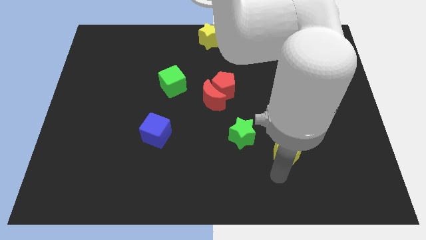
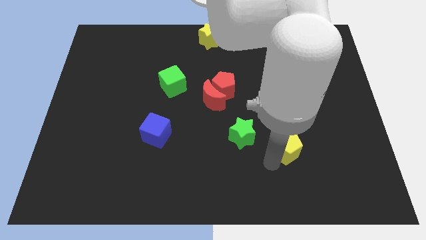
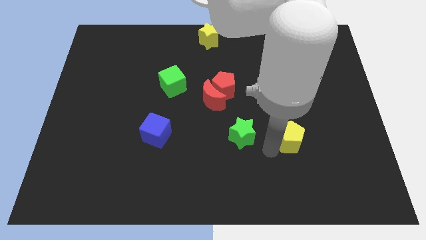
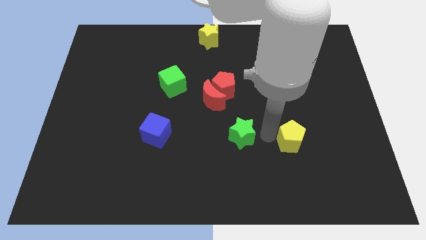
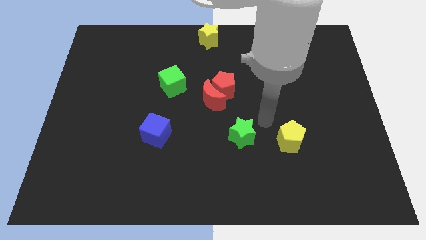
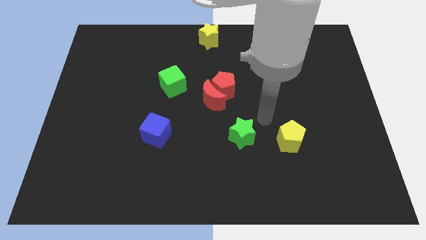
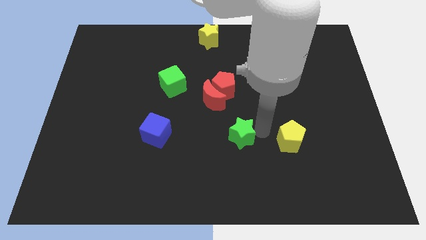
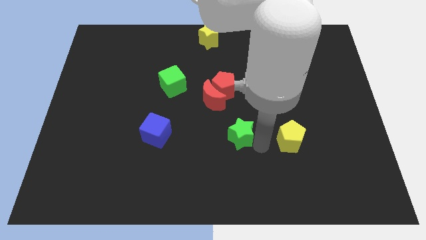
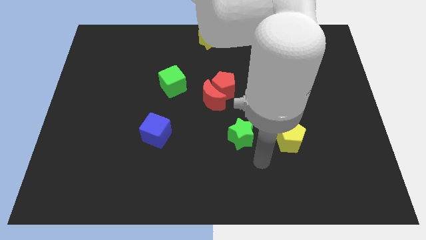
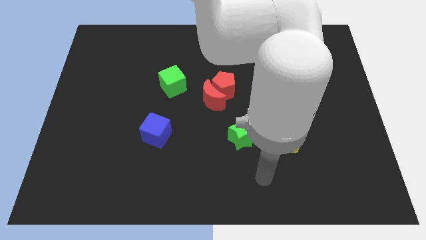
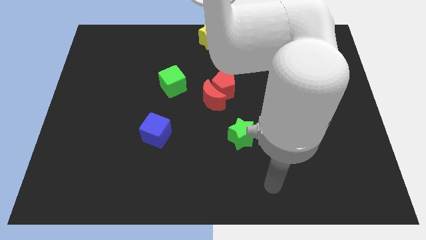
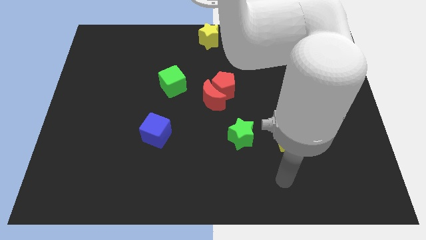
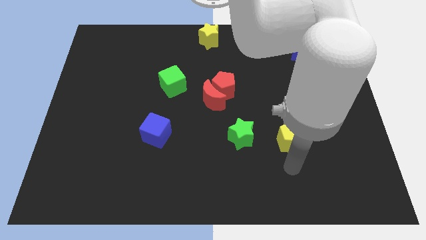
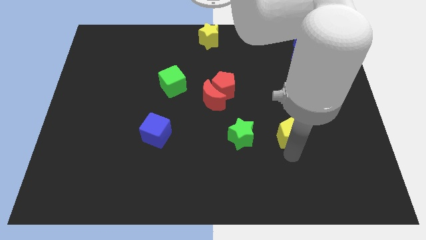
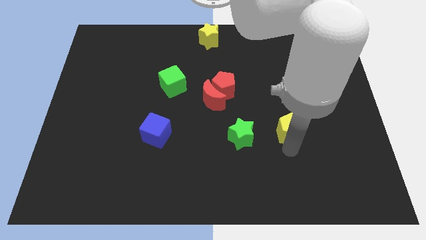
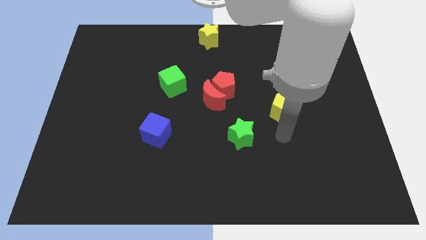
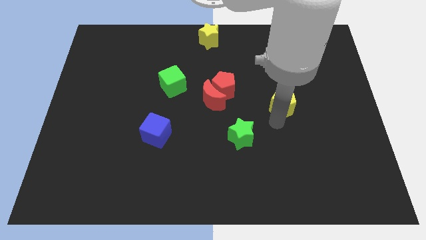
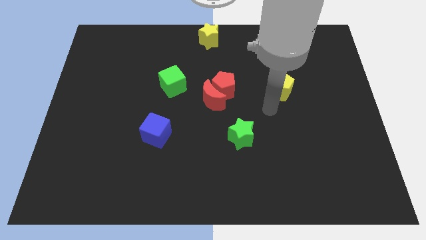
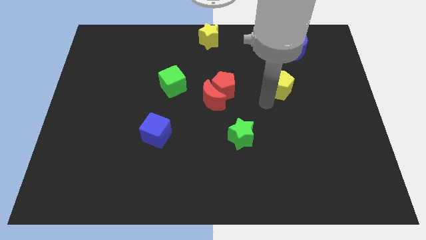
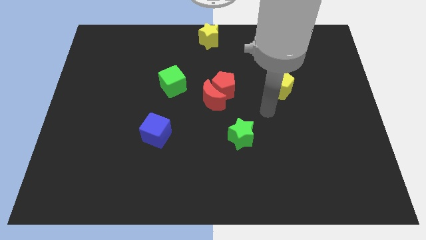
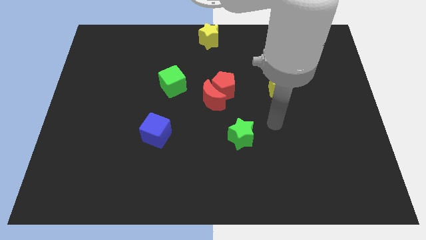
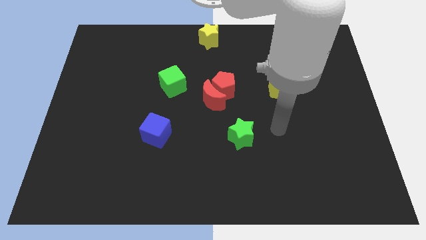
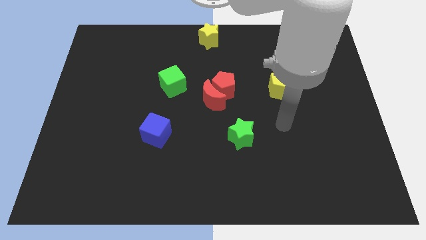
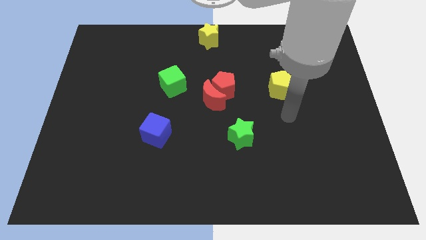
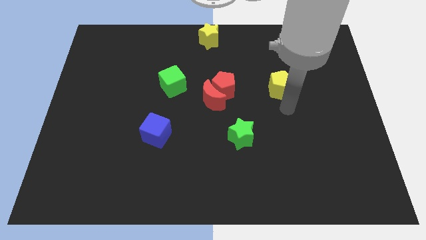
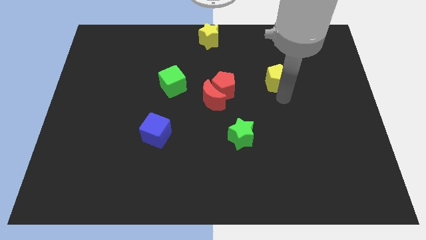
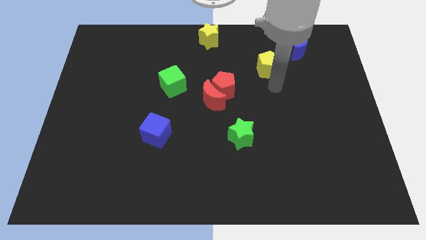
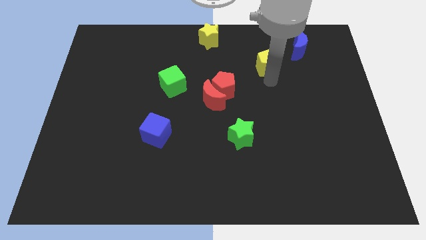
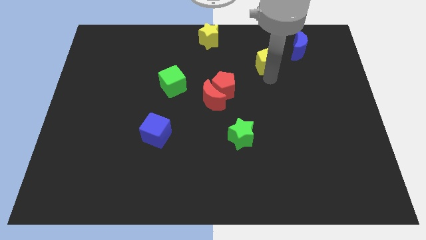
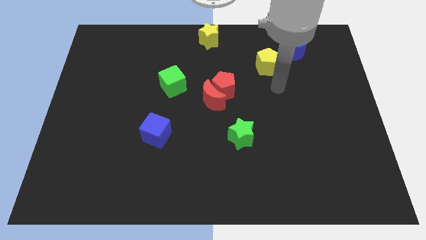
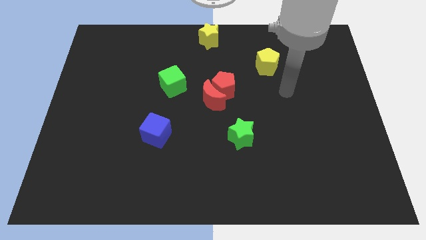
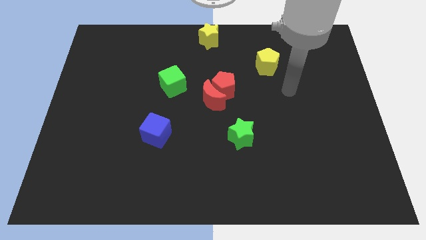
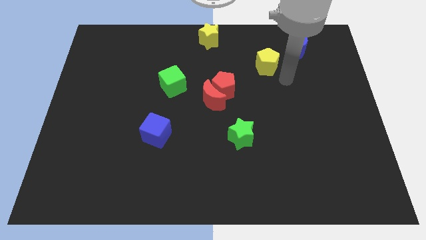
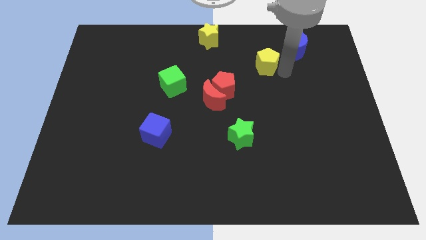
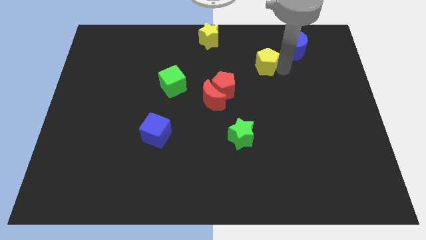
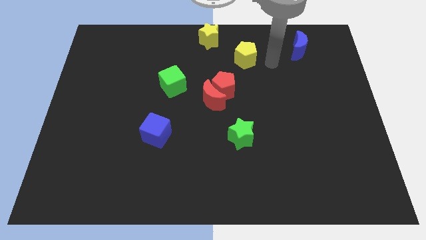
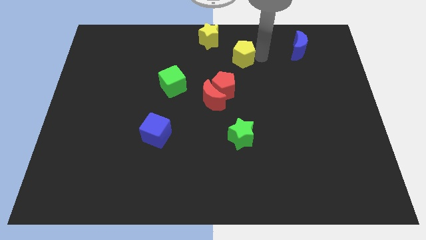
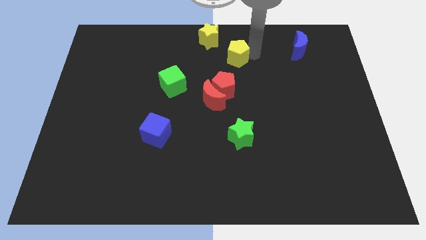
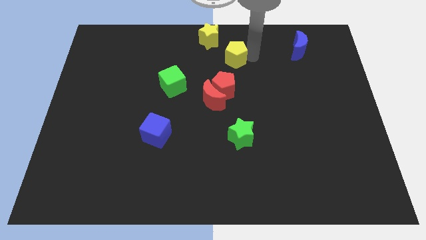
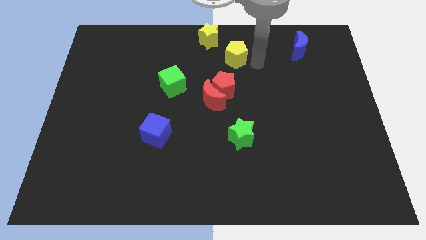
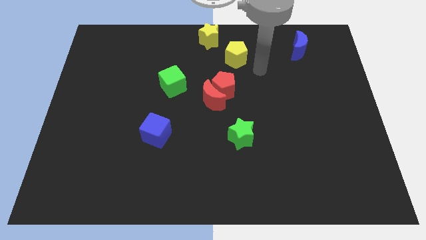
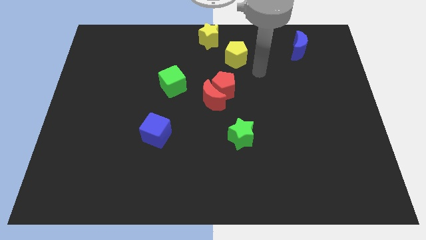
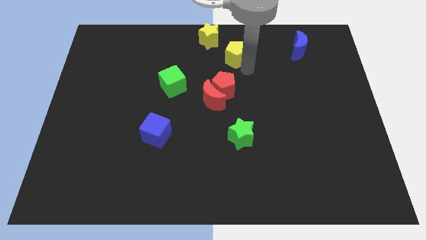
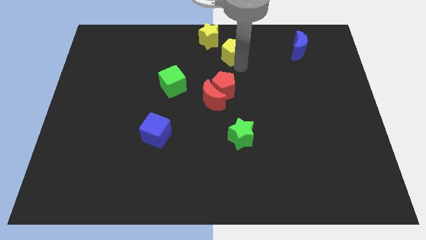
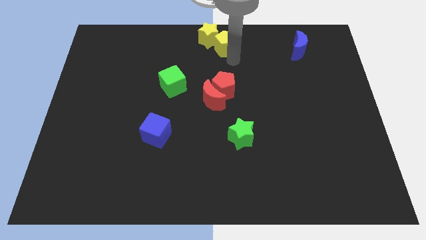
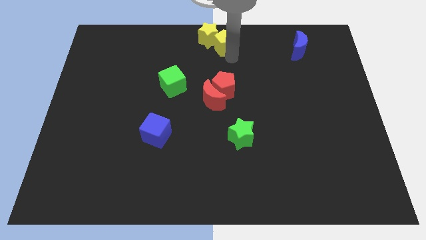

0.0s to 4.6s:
move the yellow pentagon to the top middle of the board below yellow star

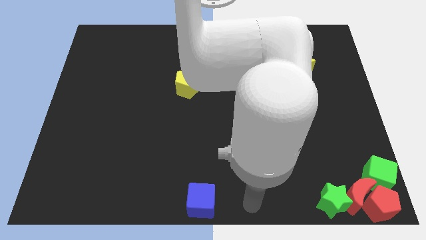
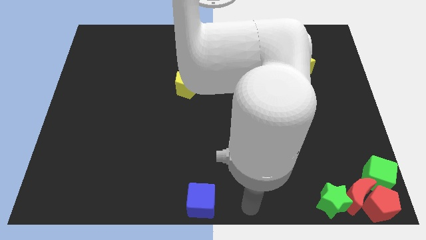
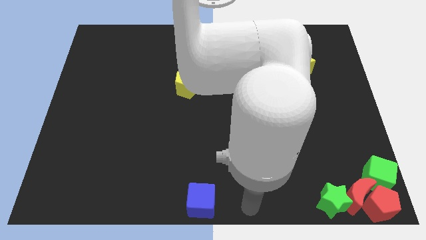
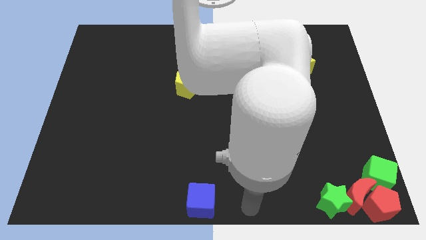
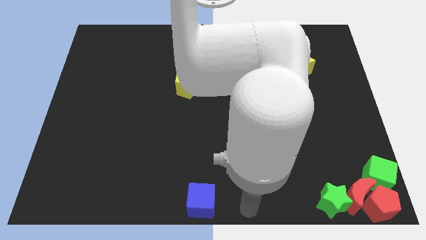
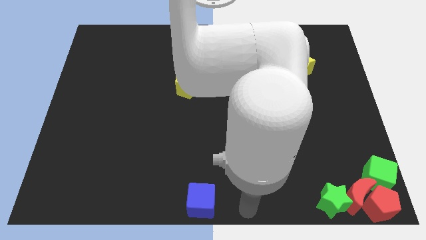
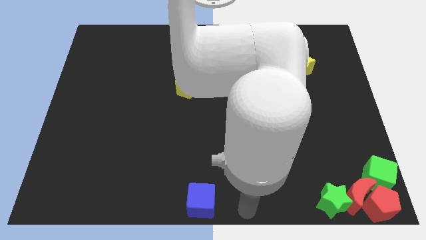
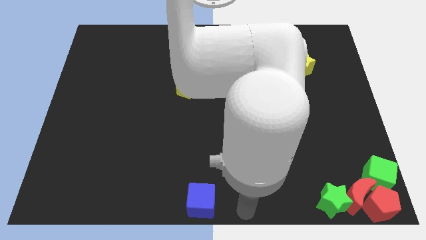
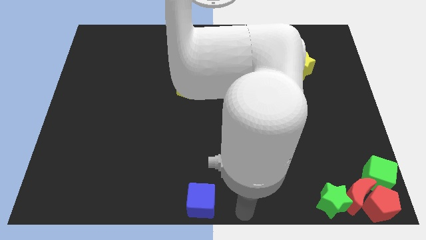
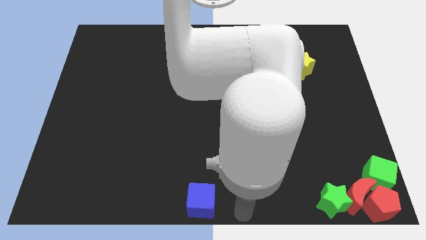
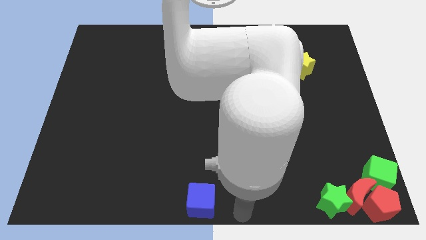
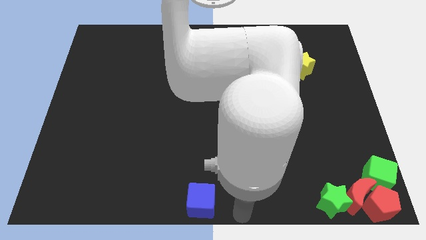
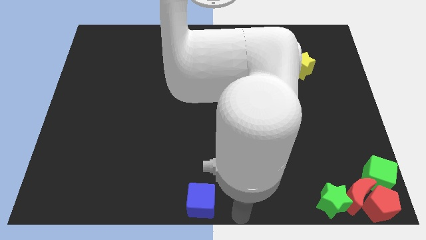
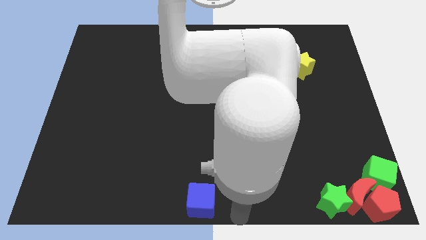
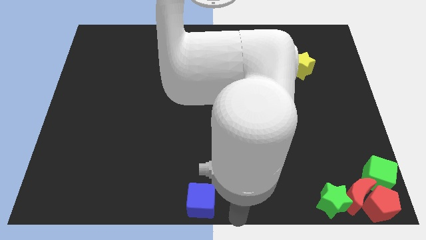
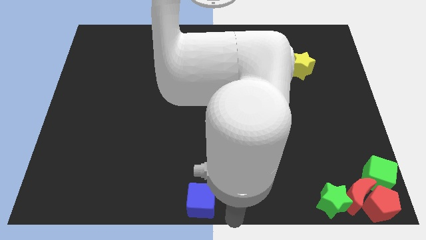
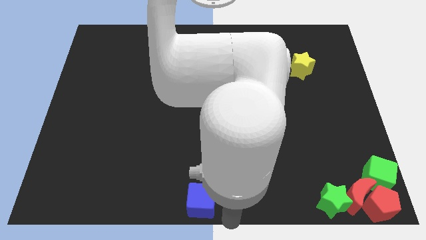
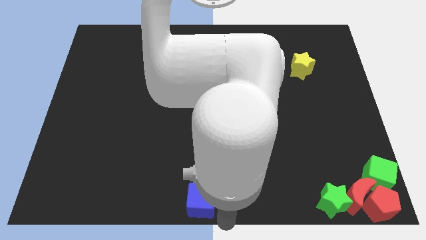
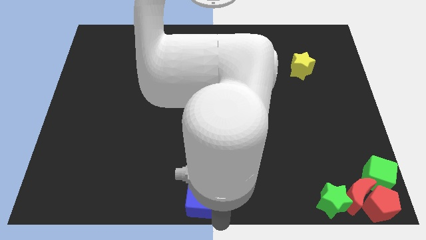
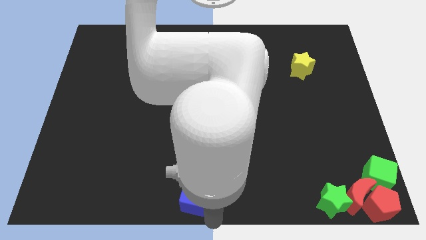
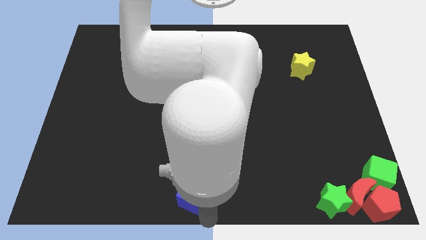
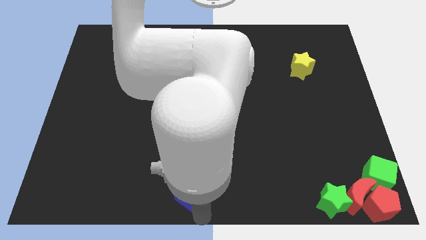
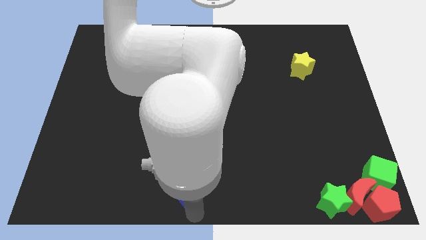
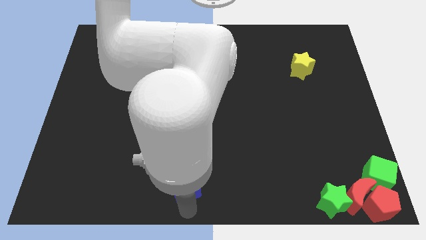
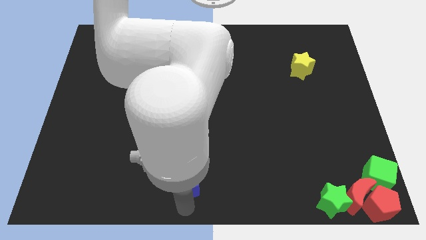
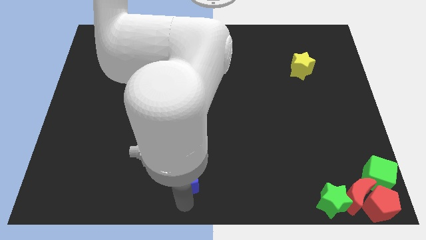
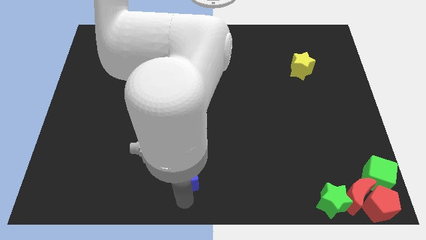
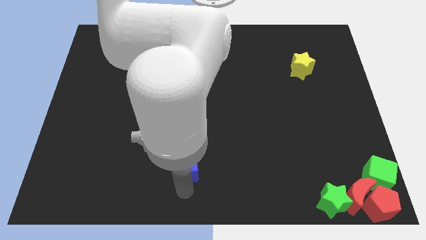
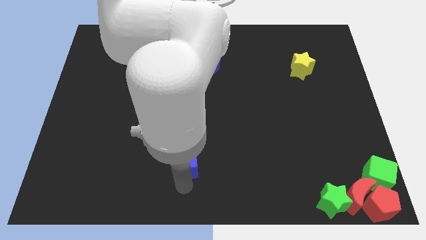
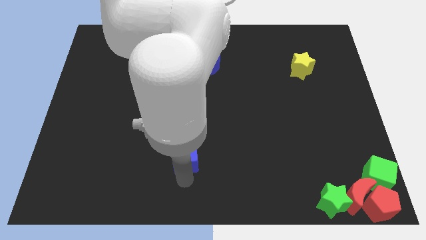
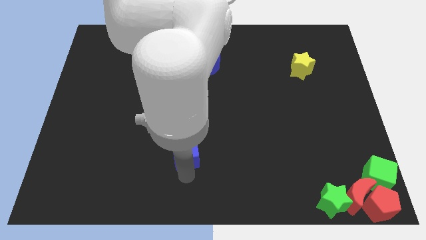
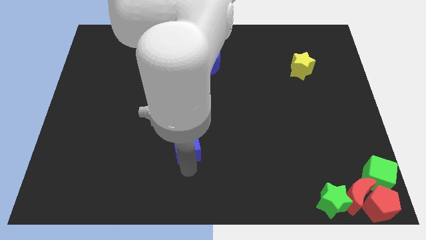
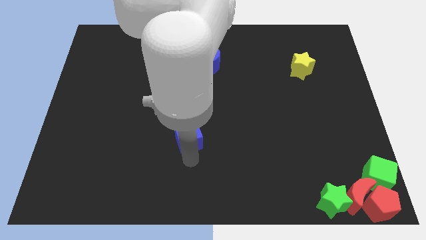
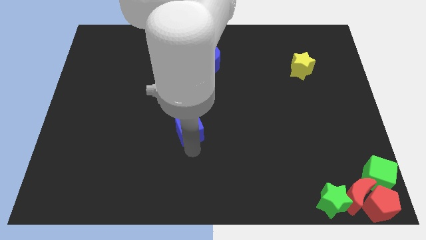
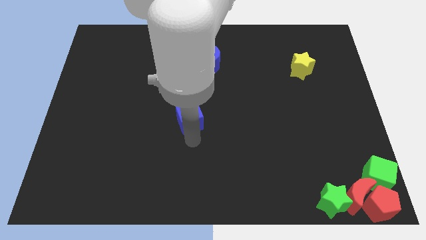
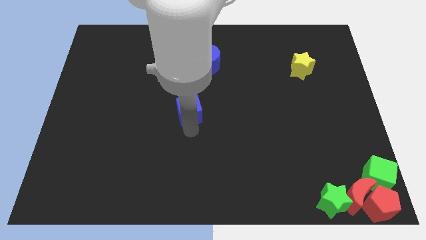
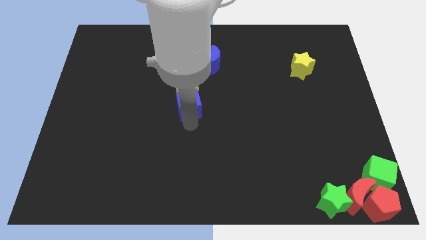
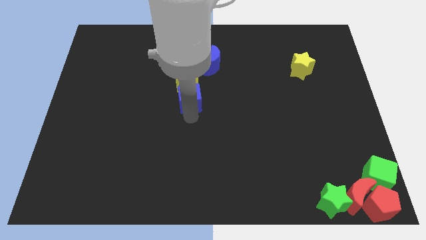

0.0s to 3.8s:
slide the blue cube into the yellow pentagon

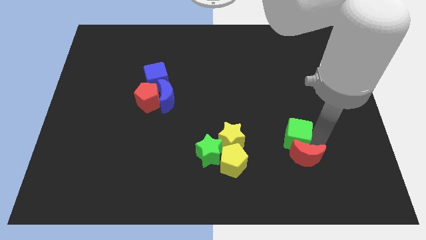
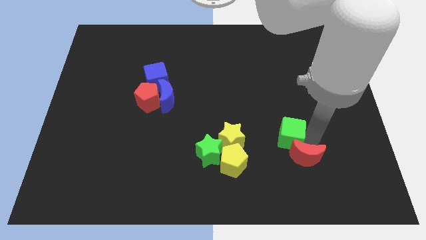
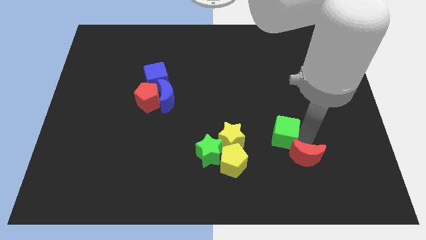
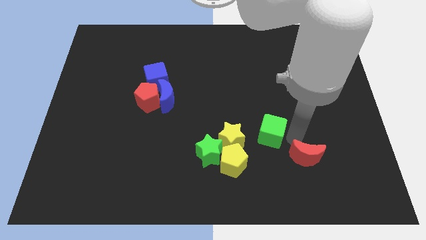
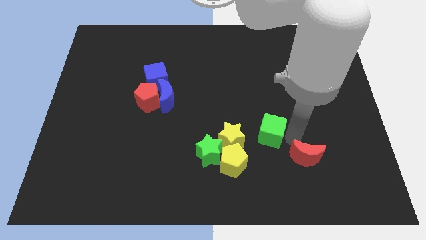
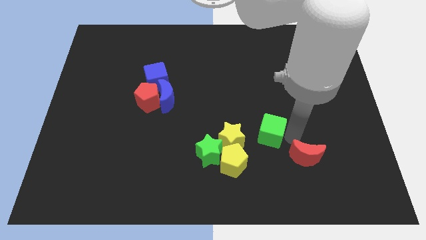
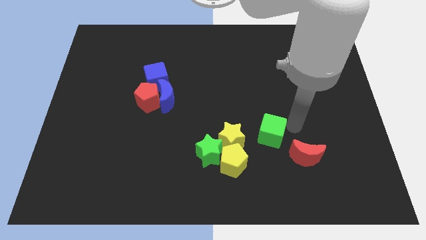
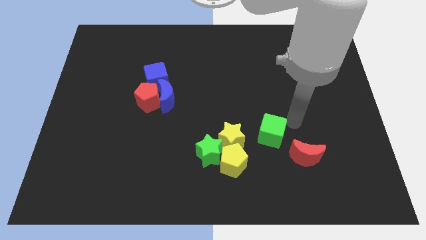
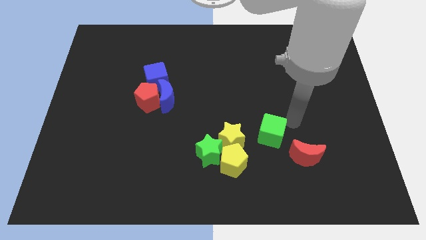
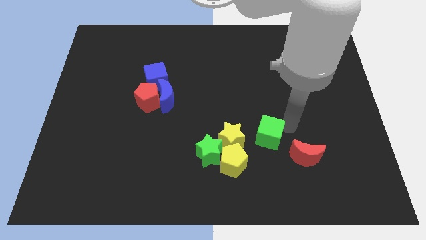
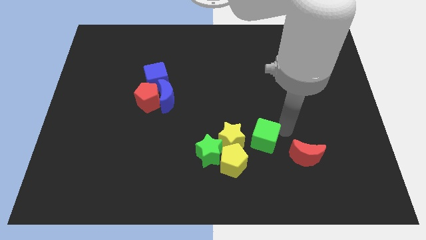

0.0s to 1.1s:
move the green cube to the right side of the yellow star
